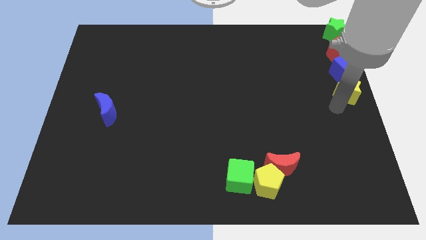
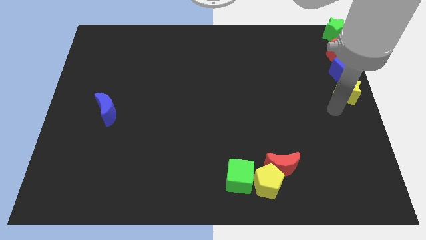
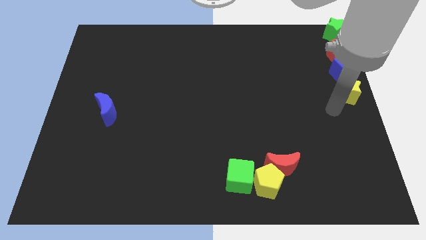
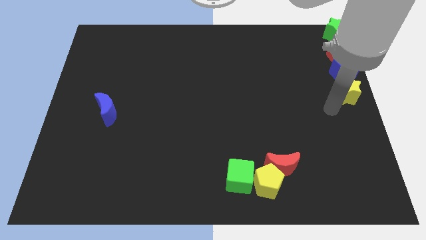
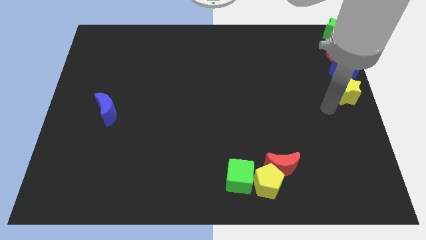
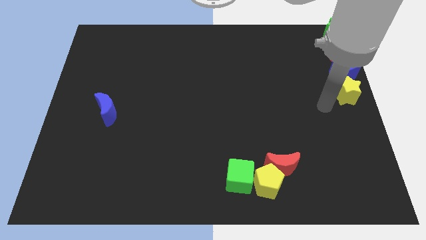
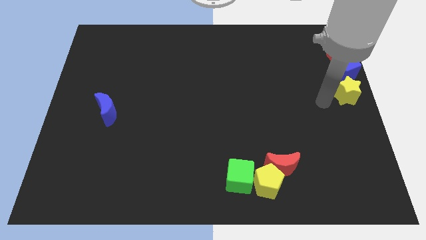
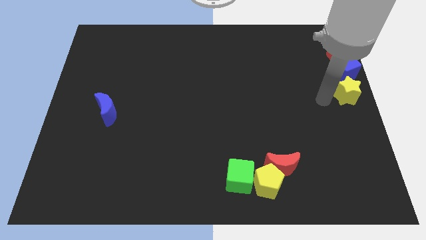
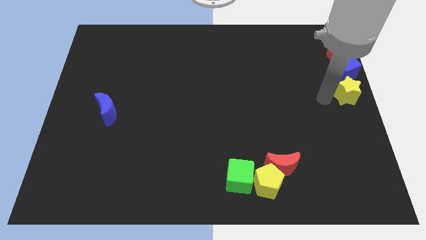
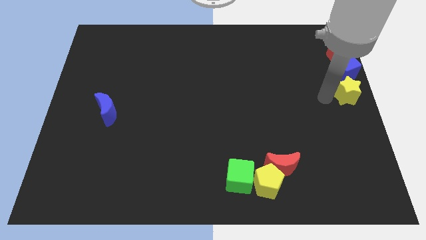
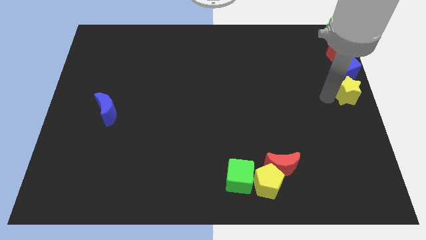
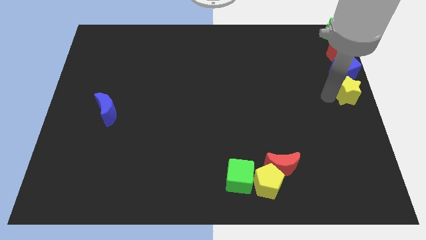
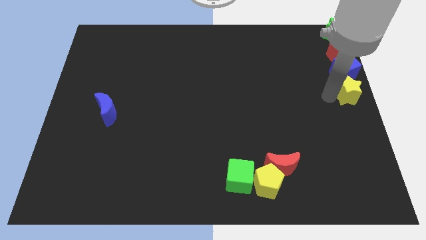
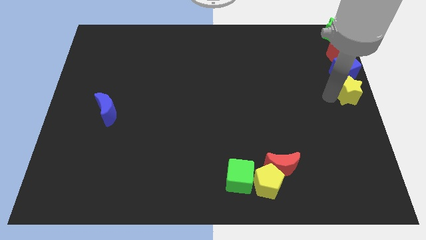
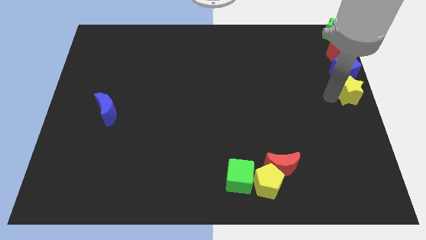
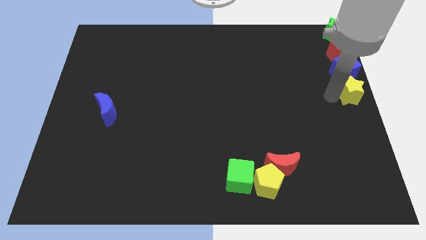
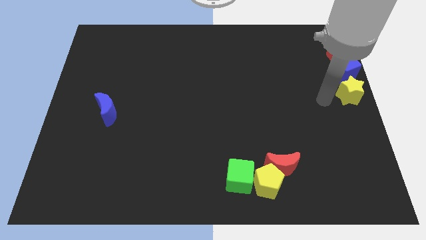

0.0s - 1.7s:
push the yellow star towards the right center of the board

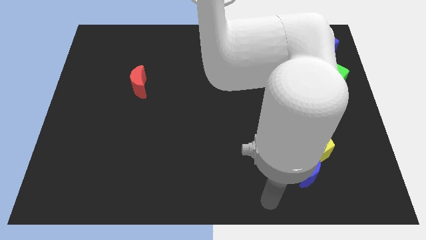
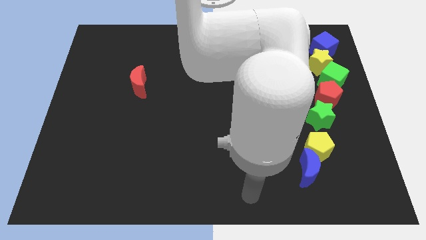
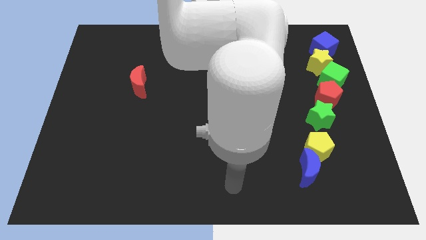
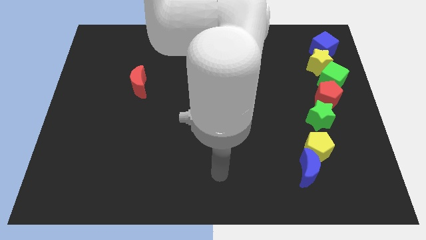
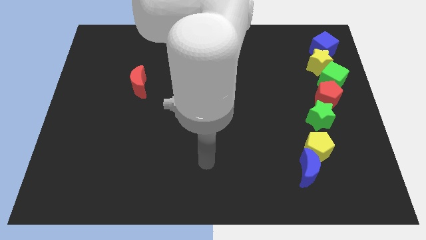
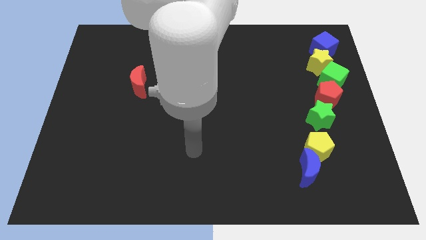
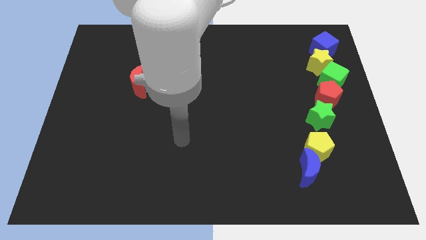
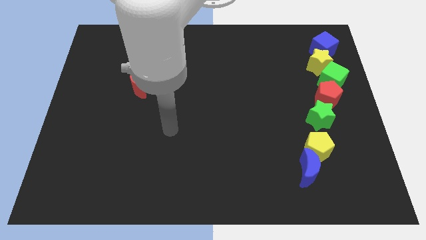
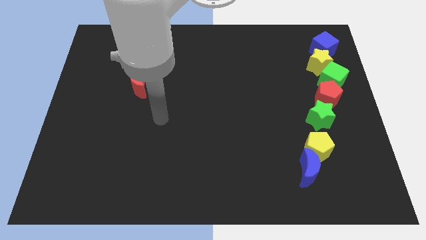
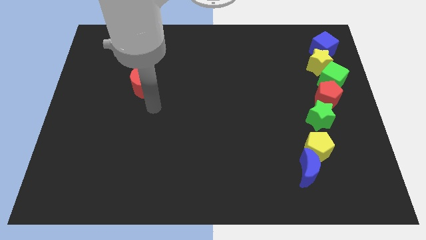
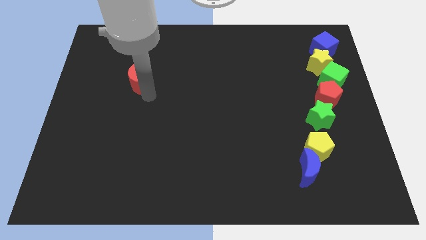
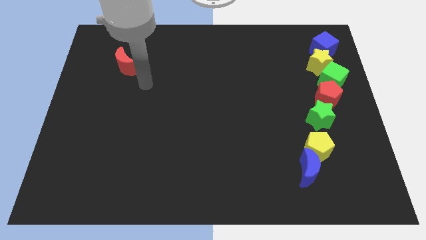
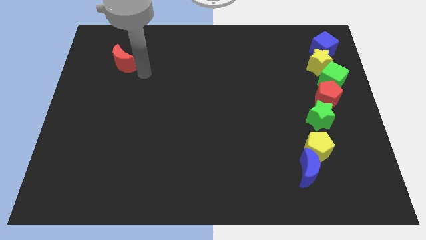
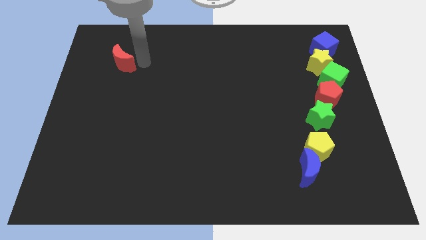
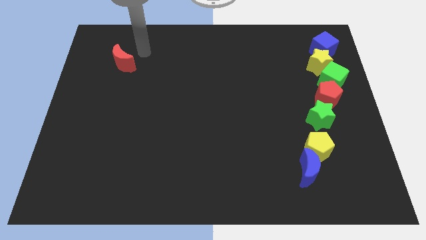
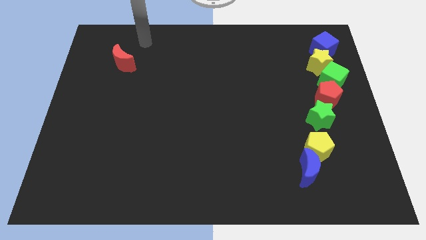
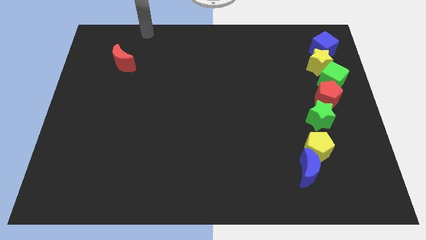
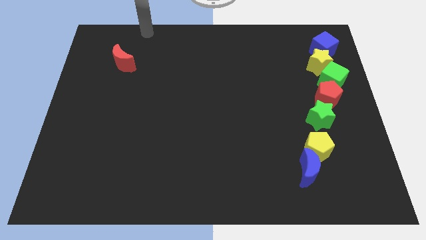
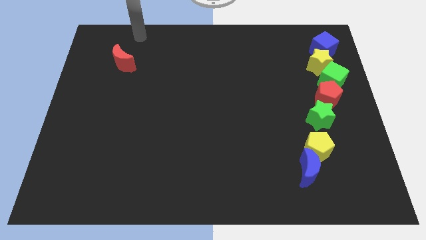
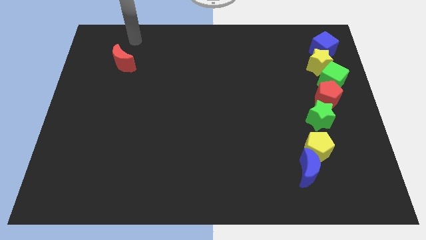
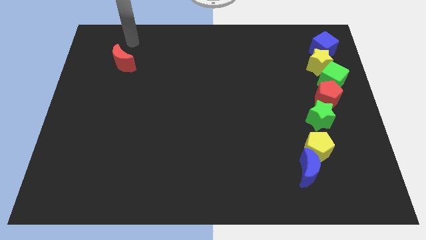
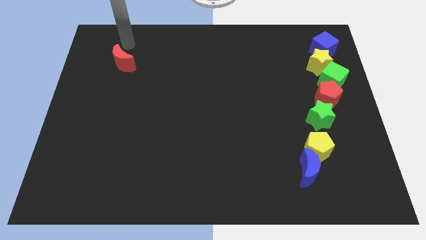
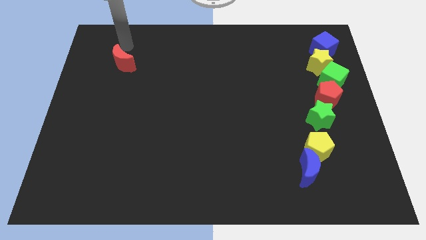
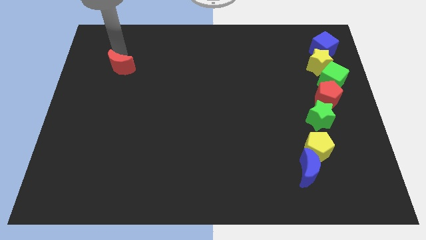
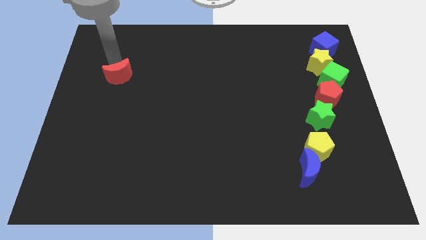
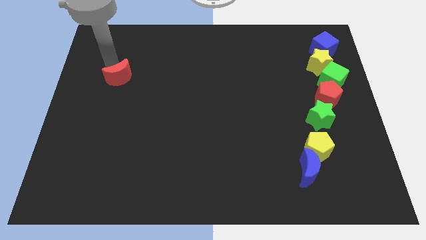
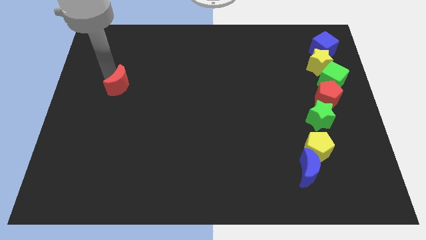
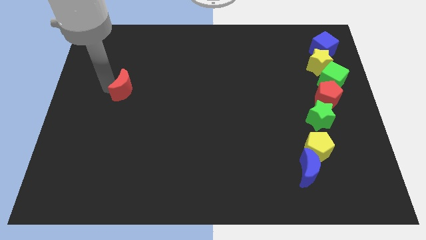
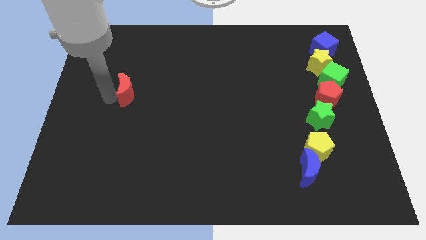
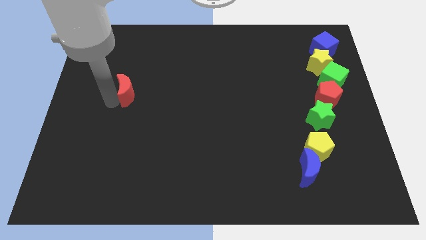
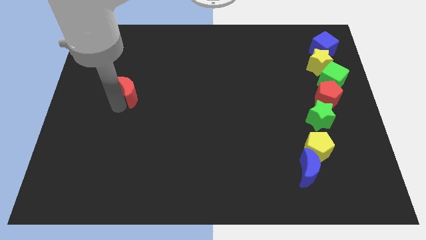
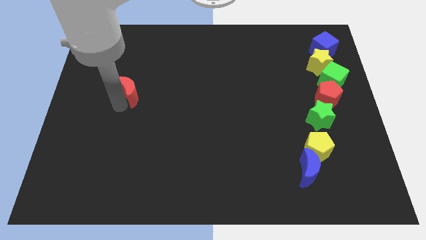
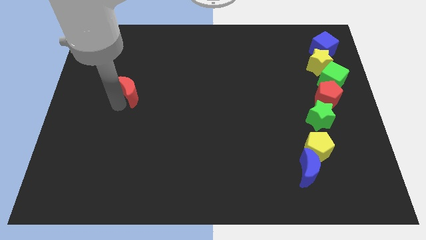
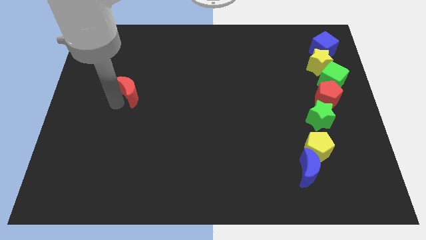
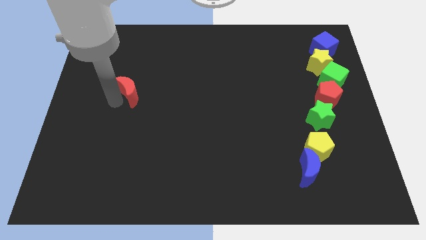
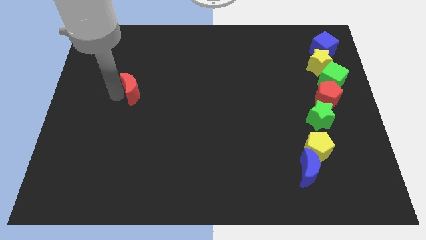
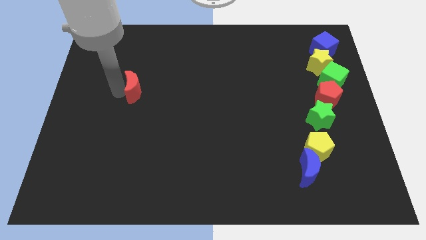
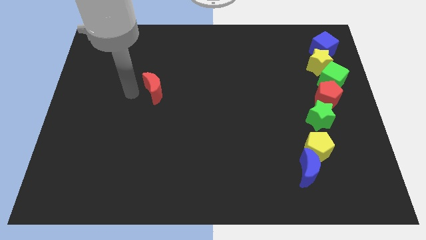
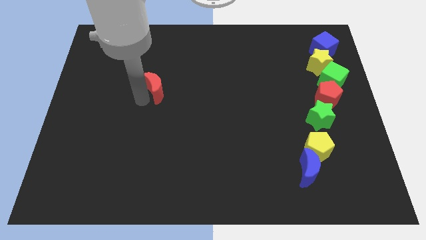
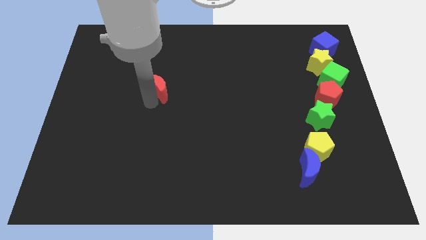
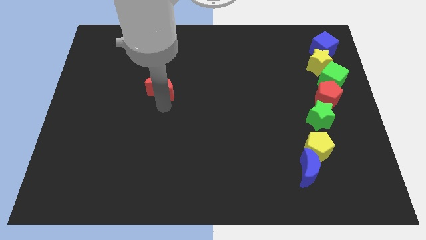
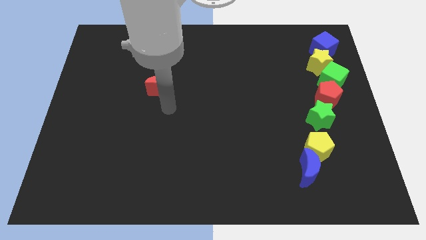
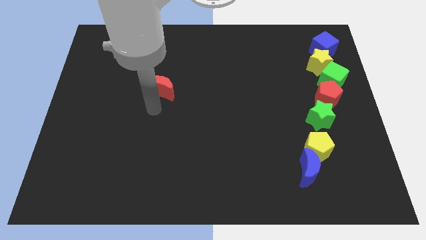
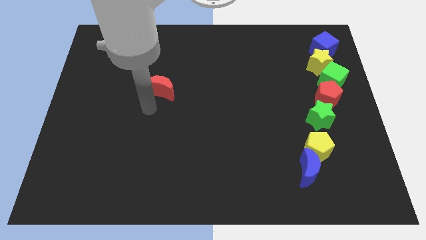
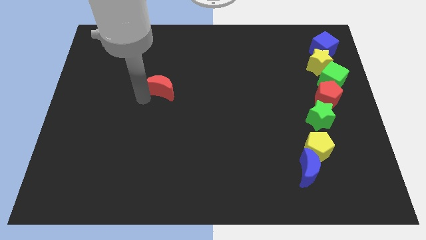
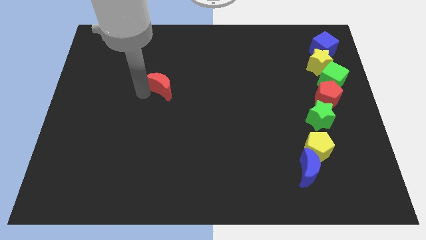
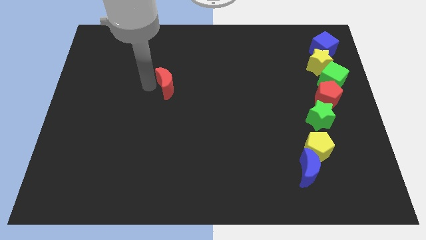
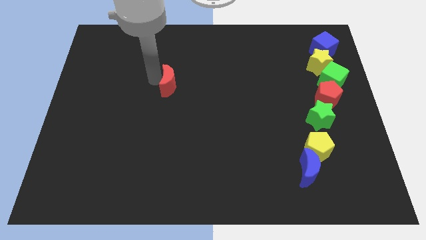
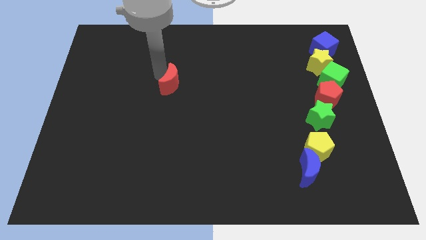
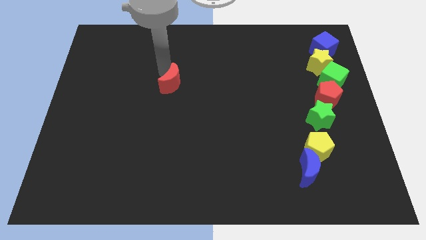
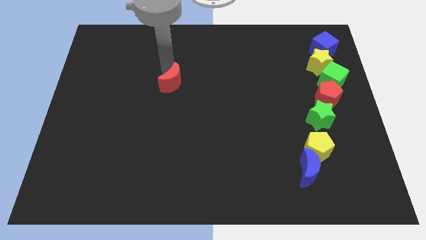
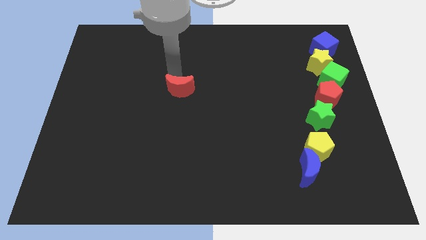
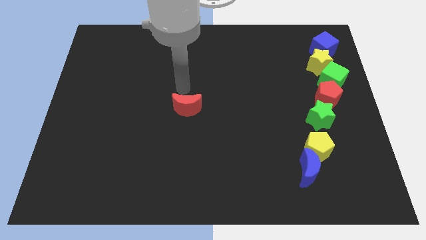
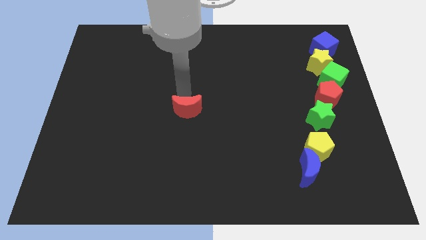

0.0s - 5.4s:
push the red moon towards the center

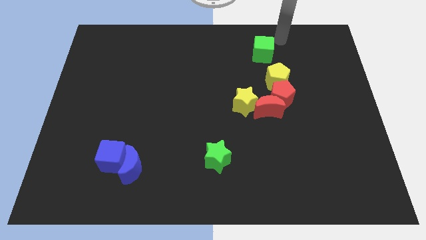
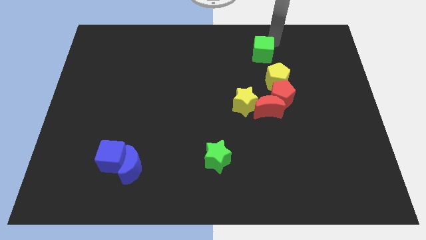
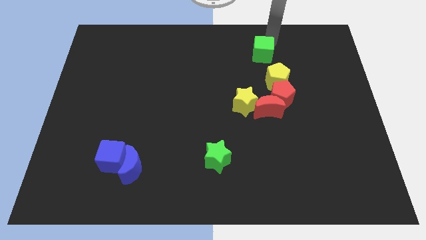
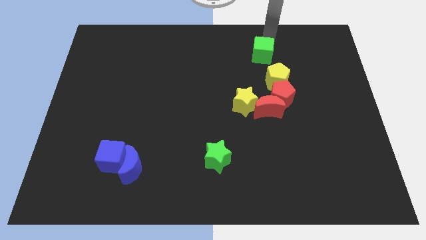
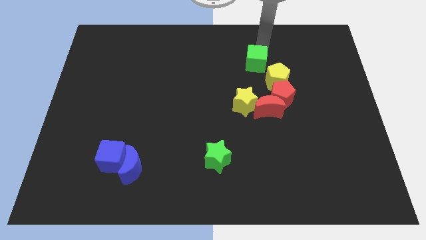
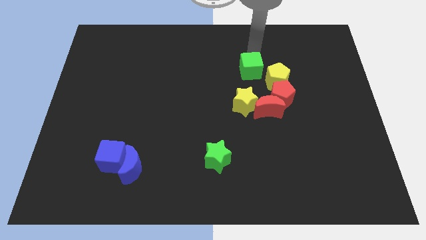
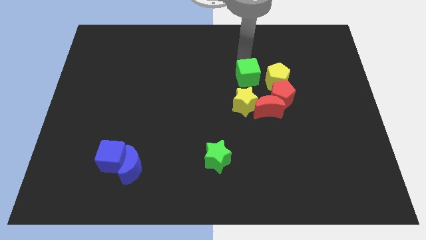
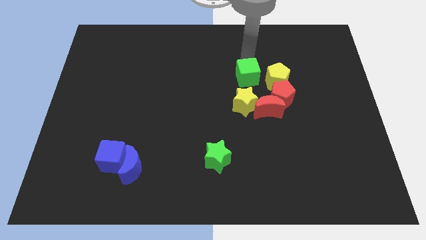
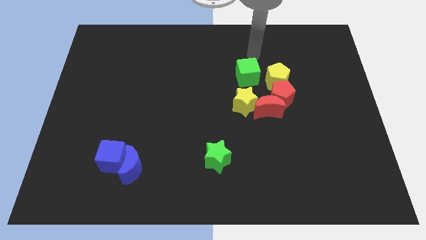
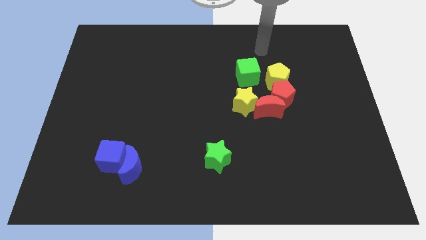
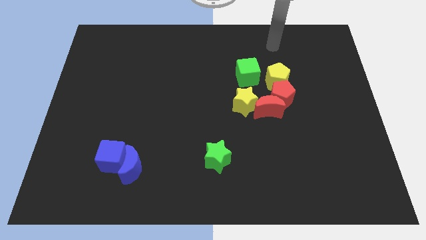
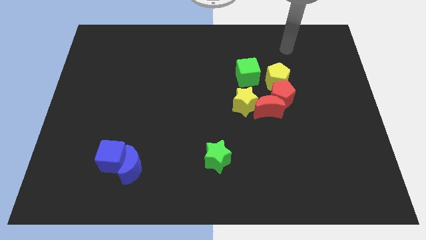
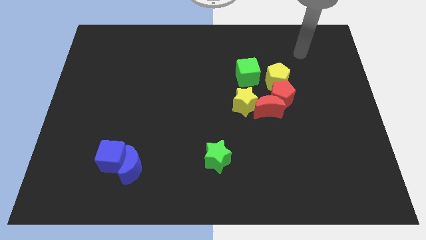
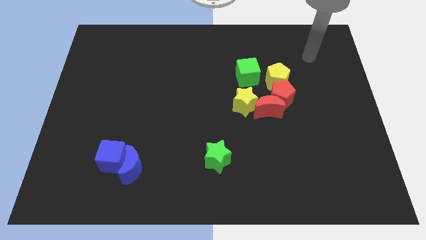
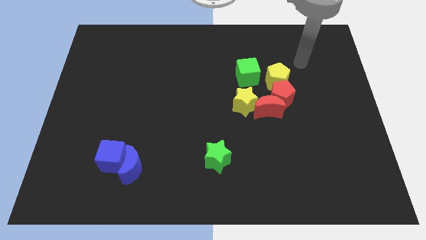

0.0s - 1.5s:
push the green cube to the top of the yellow star

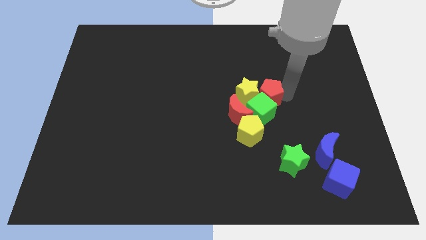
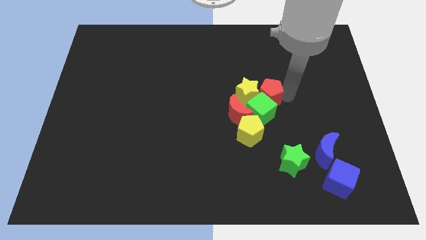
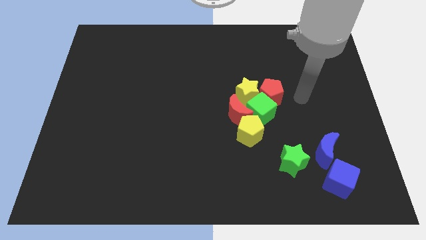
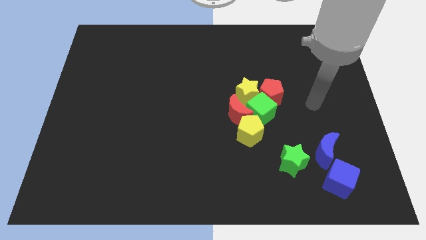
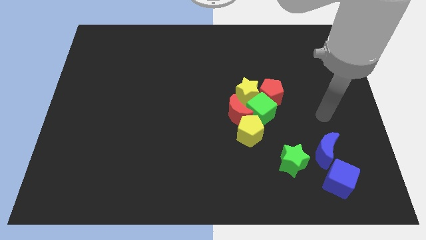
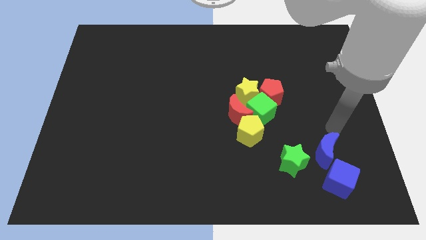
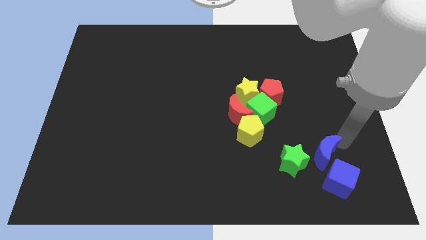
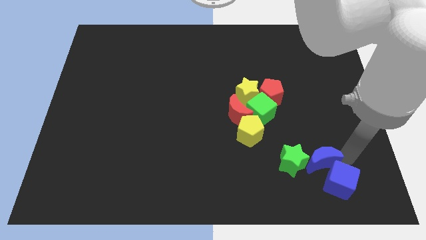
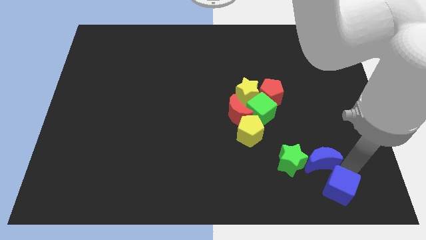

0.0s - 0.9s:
place your arm to the top of blue cube
